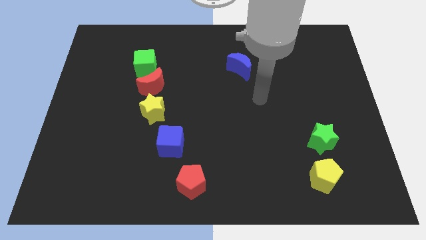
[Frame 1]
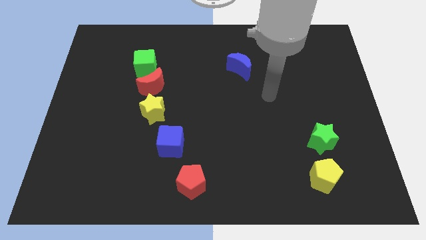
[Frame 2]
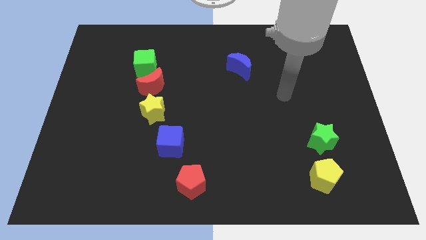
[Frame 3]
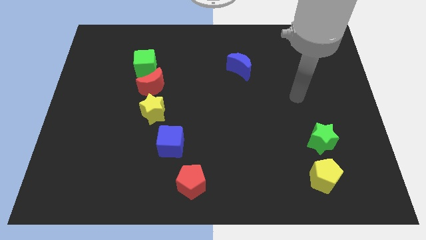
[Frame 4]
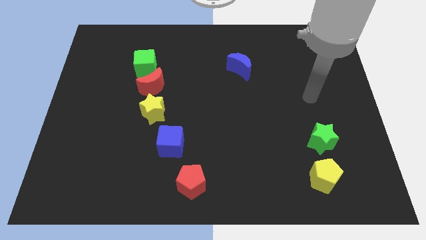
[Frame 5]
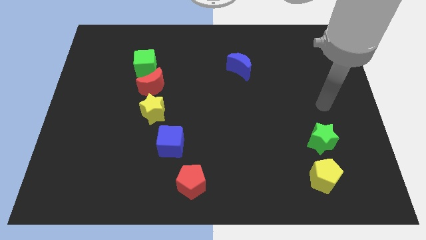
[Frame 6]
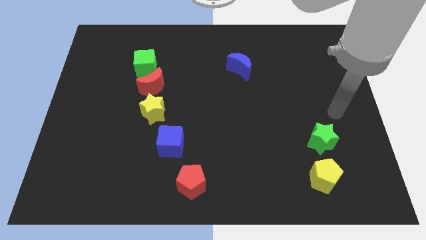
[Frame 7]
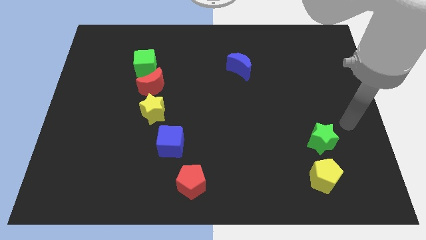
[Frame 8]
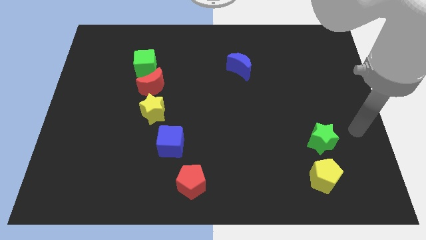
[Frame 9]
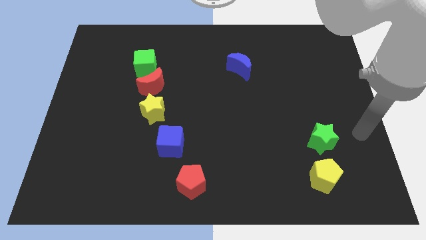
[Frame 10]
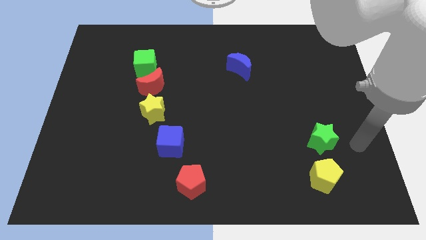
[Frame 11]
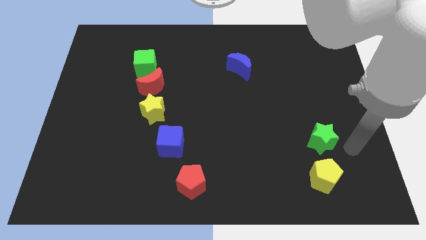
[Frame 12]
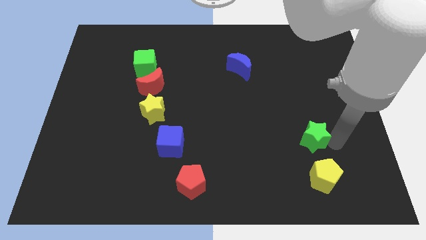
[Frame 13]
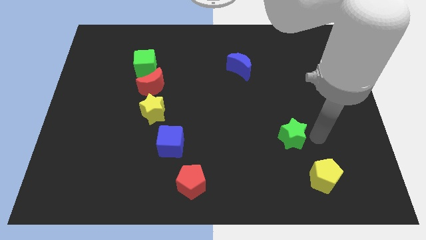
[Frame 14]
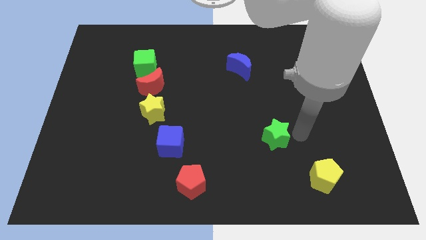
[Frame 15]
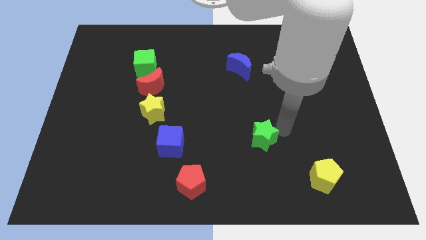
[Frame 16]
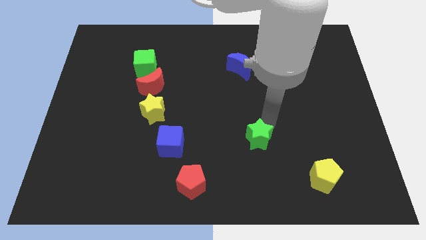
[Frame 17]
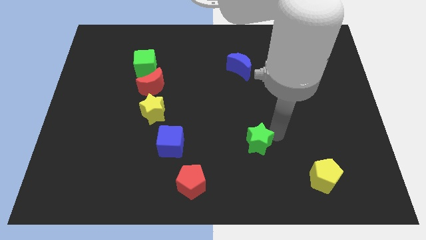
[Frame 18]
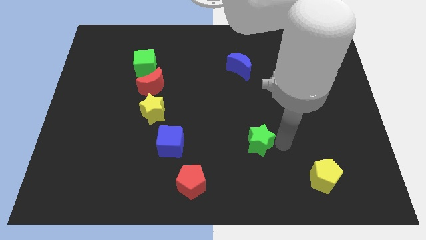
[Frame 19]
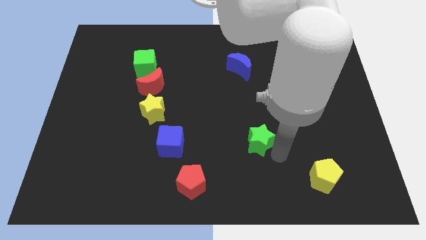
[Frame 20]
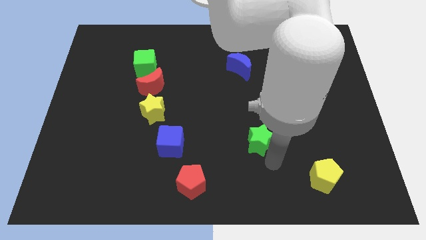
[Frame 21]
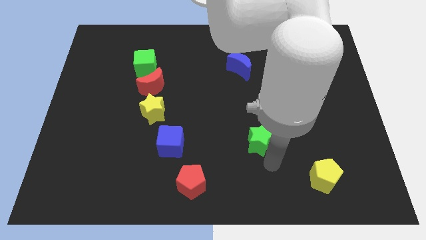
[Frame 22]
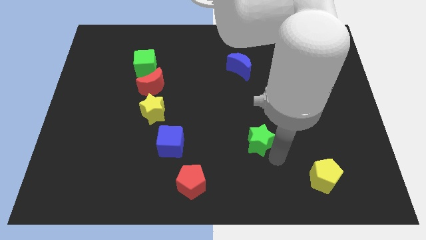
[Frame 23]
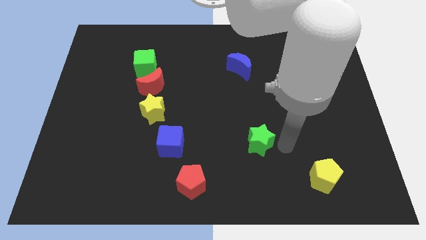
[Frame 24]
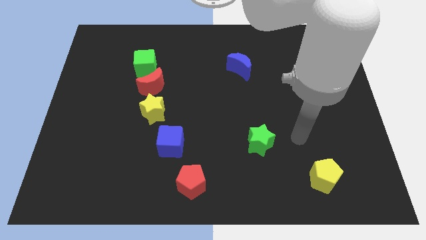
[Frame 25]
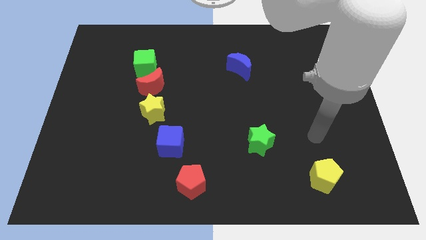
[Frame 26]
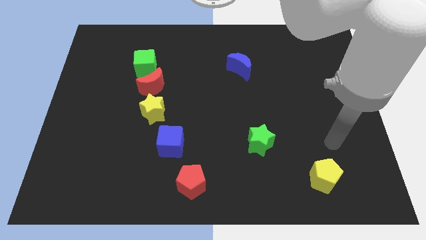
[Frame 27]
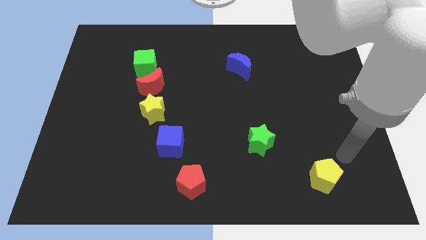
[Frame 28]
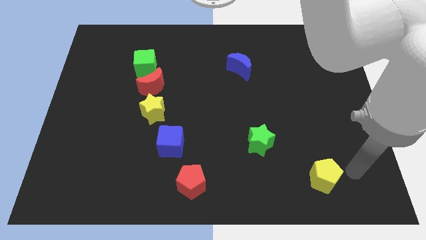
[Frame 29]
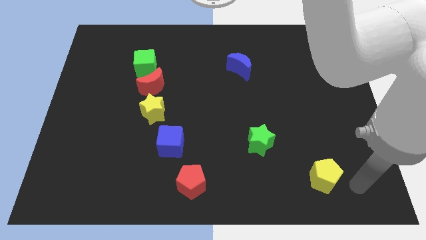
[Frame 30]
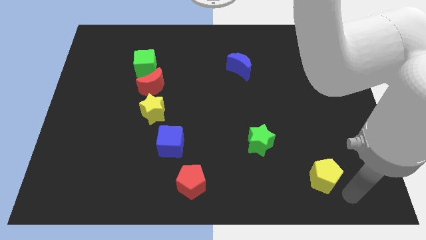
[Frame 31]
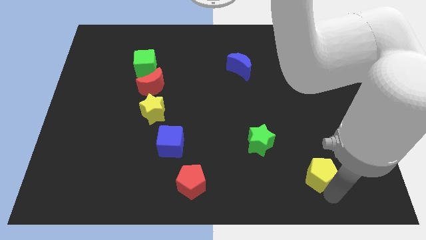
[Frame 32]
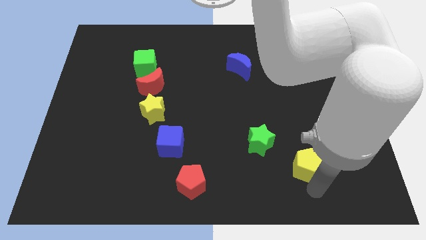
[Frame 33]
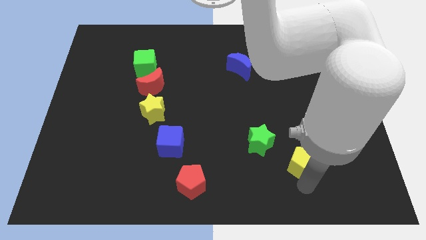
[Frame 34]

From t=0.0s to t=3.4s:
slide the yellow pentagon towards the green star

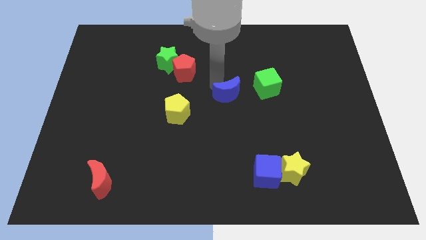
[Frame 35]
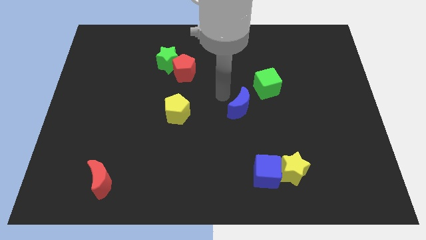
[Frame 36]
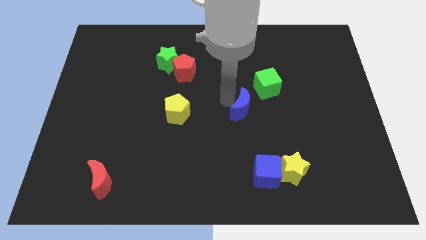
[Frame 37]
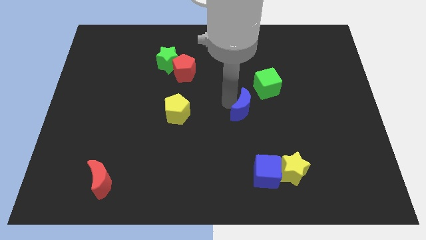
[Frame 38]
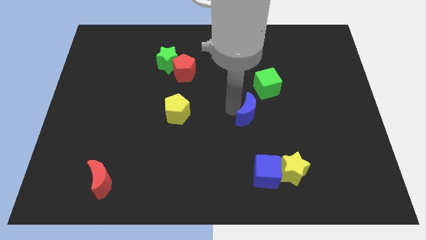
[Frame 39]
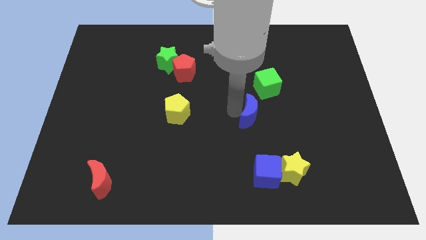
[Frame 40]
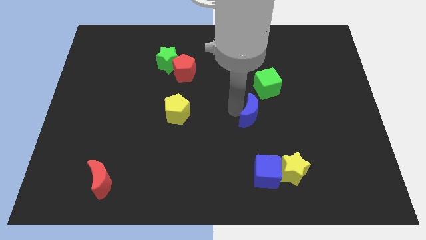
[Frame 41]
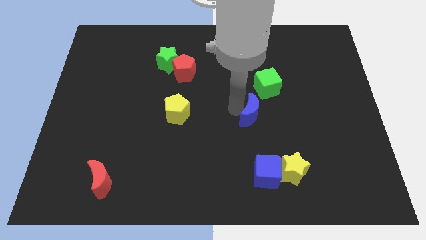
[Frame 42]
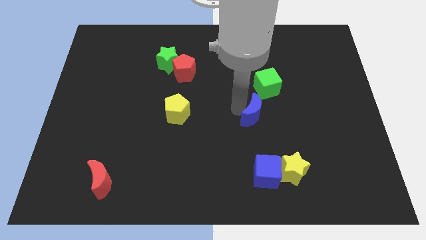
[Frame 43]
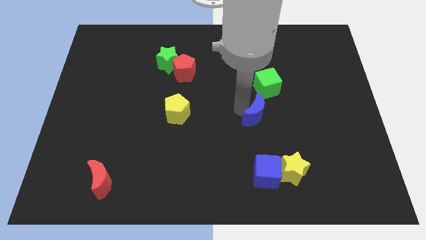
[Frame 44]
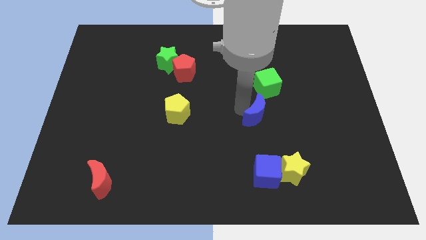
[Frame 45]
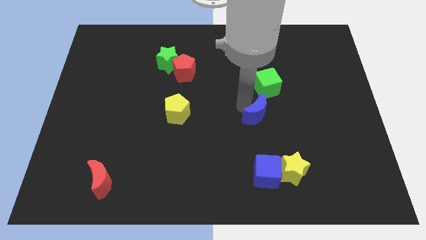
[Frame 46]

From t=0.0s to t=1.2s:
place the blue moon diagonal to the green cube

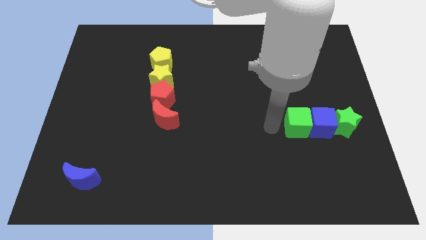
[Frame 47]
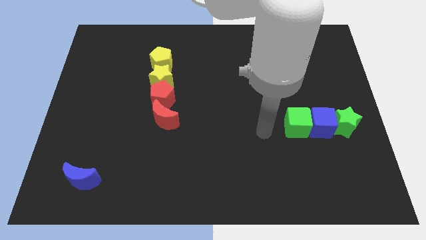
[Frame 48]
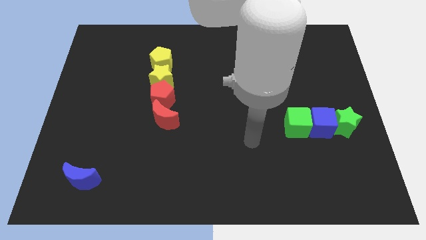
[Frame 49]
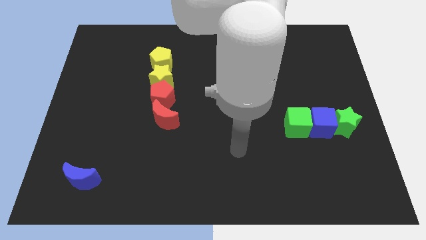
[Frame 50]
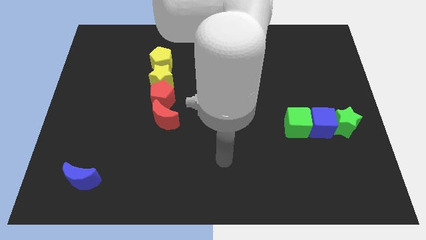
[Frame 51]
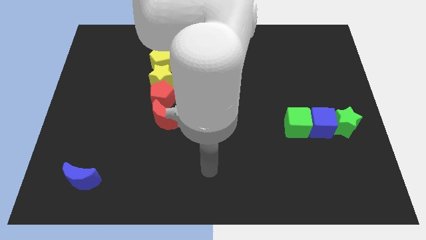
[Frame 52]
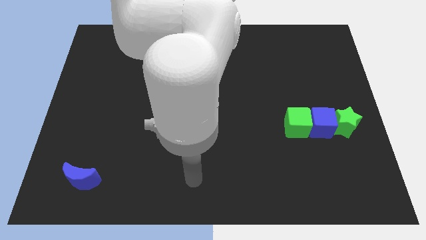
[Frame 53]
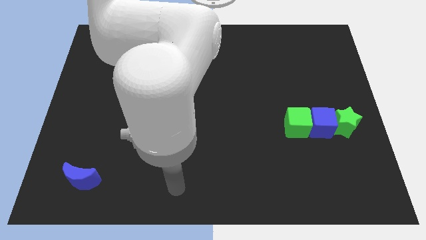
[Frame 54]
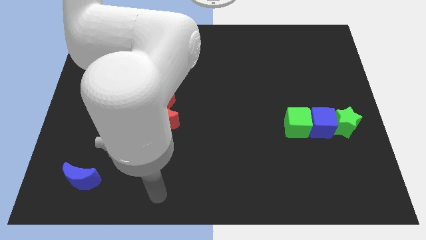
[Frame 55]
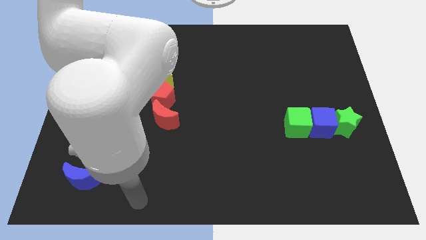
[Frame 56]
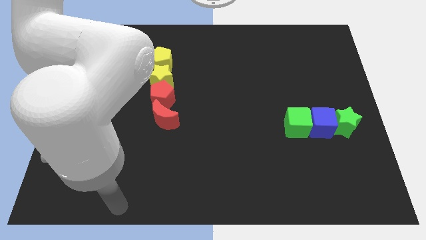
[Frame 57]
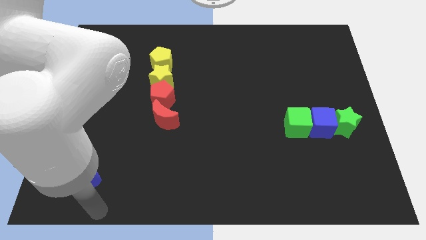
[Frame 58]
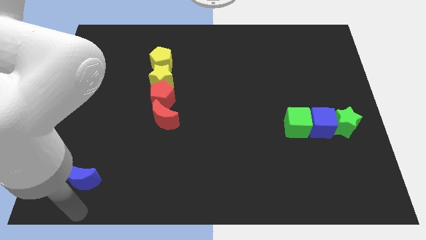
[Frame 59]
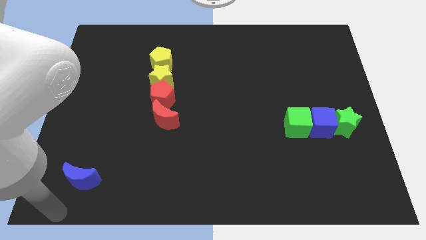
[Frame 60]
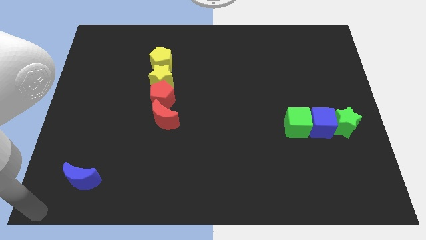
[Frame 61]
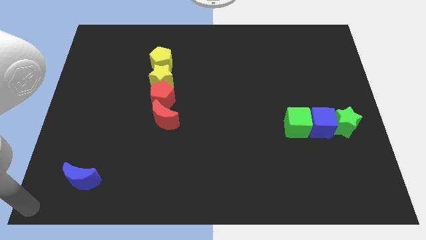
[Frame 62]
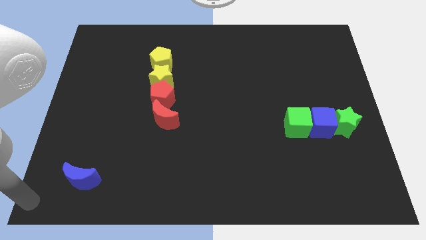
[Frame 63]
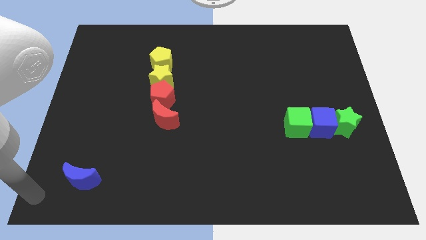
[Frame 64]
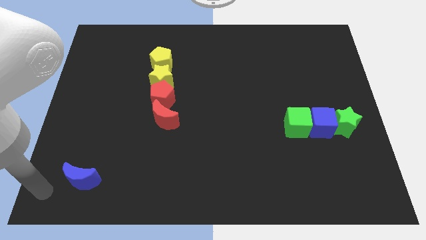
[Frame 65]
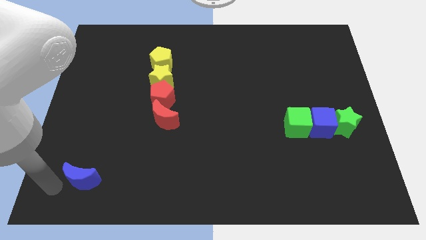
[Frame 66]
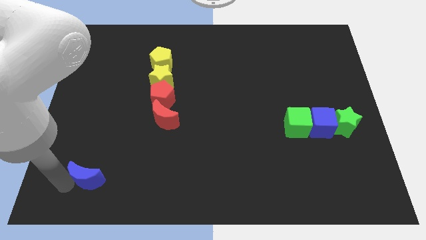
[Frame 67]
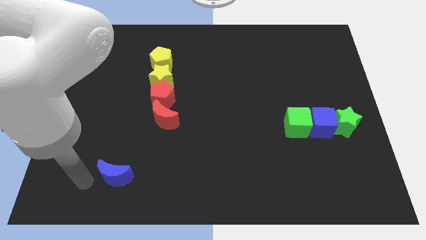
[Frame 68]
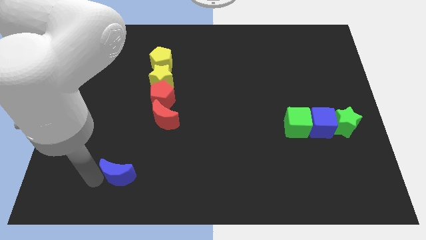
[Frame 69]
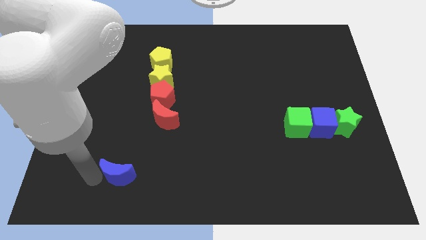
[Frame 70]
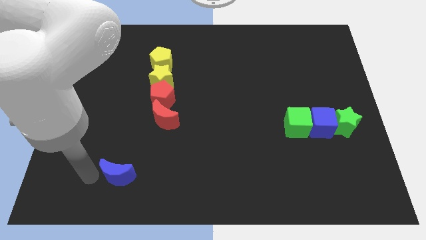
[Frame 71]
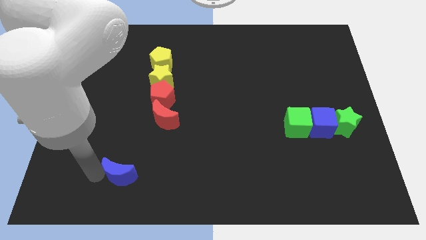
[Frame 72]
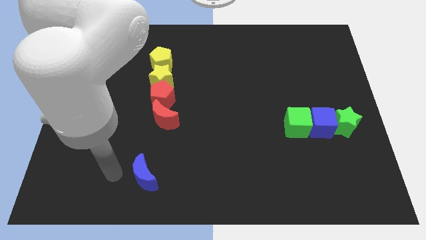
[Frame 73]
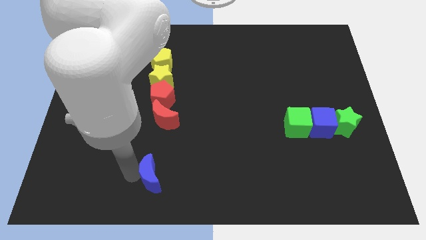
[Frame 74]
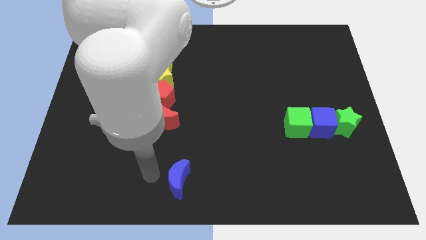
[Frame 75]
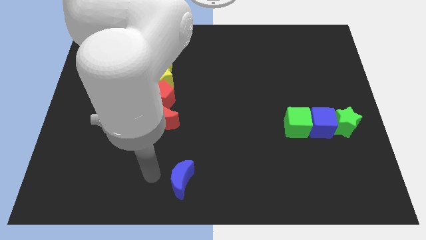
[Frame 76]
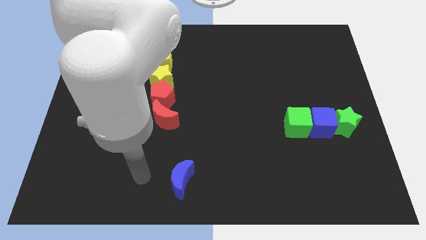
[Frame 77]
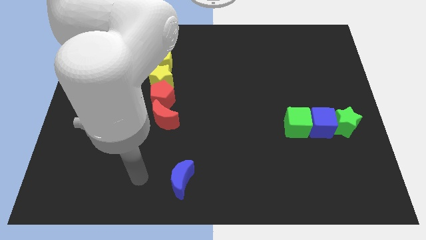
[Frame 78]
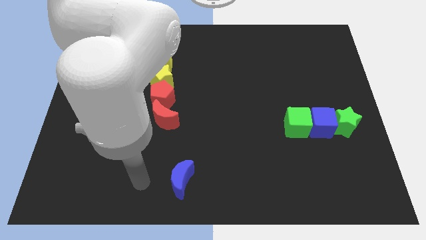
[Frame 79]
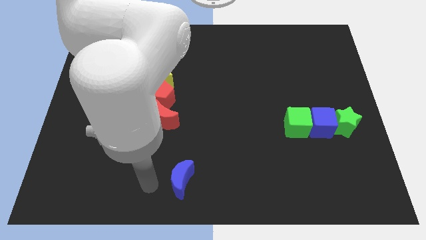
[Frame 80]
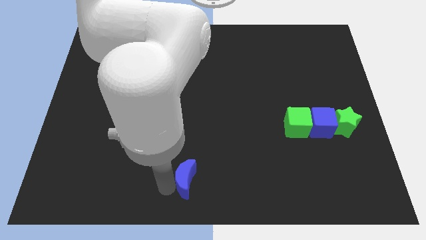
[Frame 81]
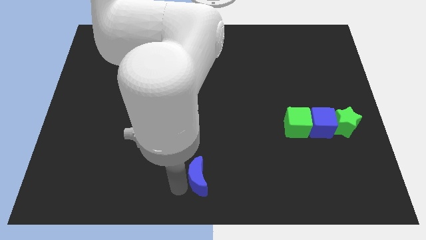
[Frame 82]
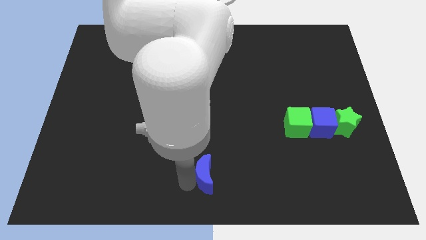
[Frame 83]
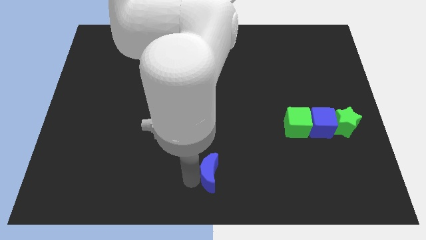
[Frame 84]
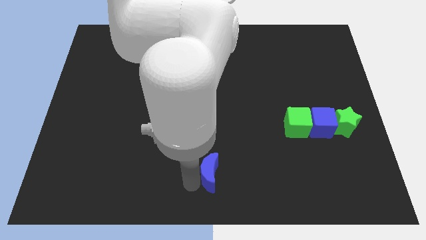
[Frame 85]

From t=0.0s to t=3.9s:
place the blue crescent at the bottom center of the board
